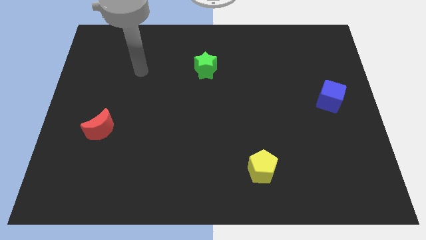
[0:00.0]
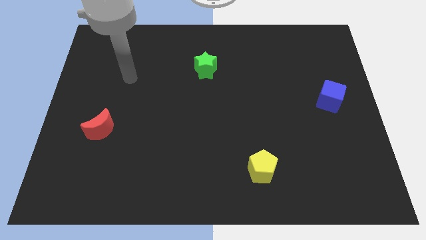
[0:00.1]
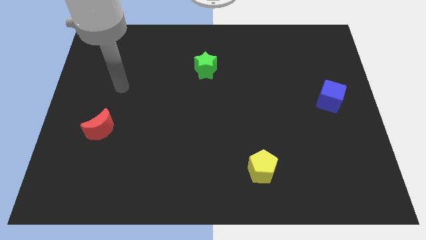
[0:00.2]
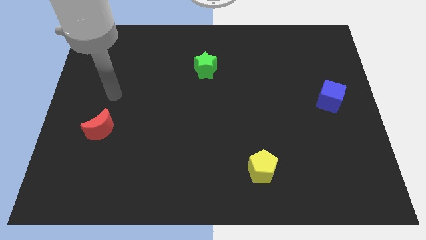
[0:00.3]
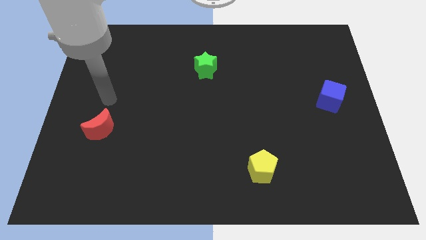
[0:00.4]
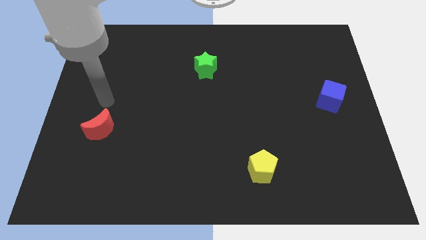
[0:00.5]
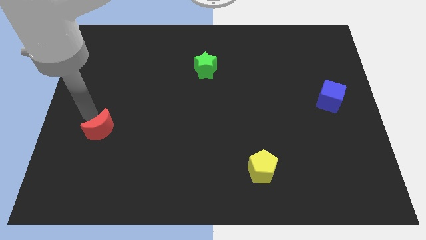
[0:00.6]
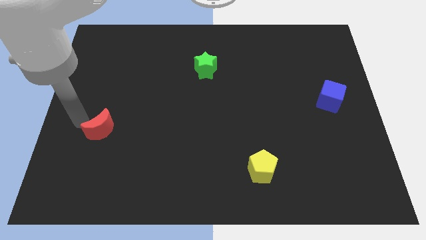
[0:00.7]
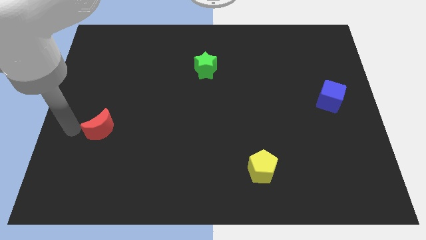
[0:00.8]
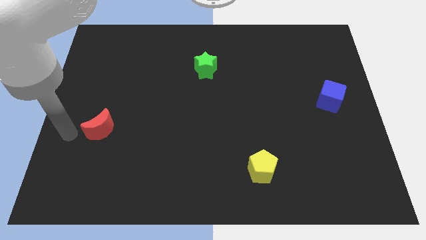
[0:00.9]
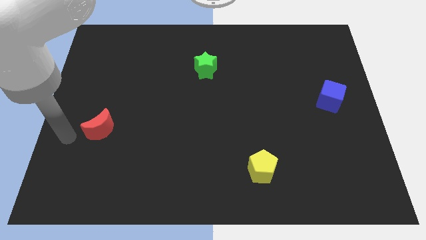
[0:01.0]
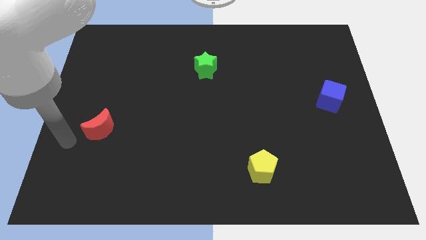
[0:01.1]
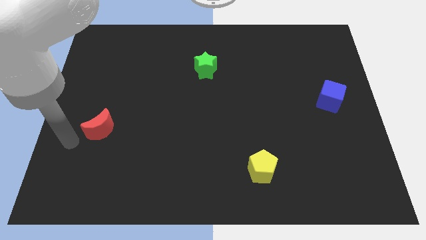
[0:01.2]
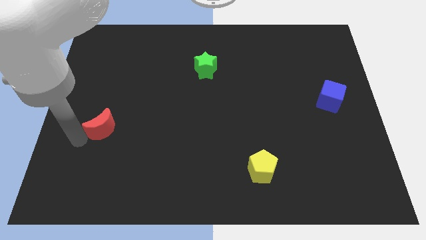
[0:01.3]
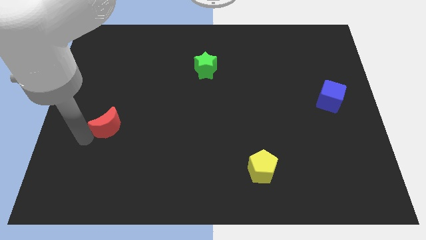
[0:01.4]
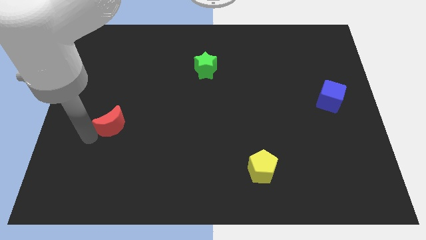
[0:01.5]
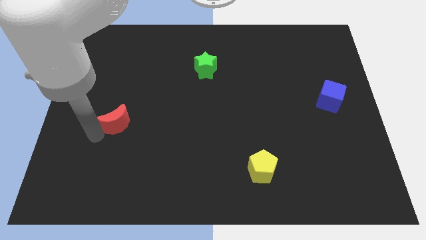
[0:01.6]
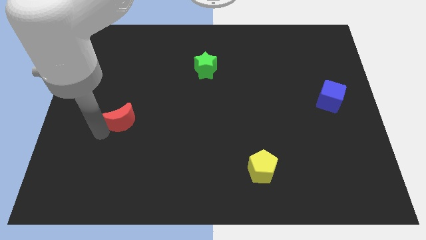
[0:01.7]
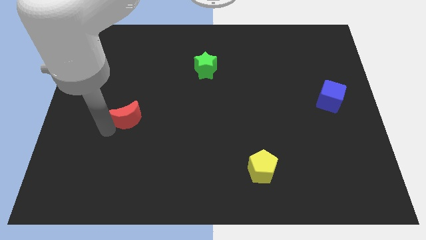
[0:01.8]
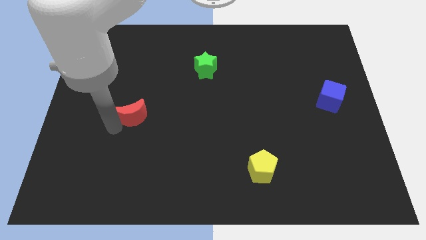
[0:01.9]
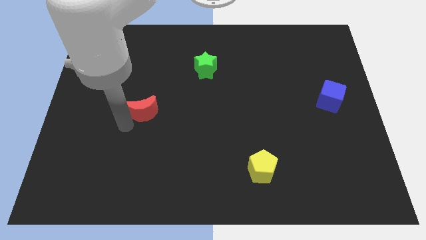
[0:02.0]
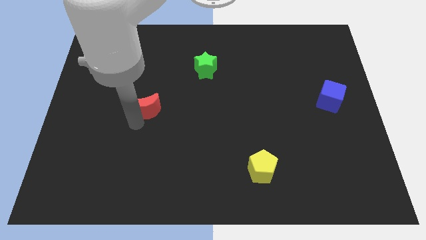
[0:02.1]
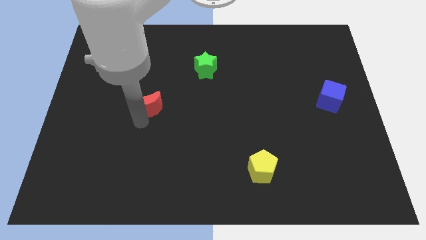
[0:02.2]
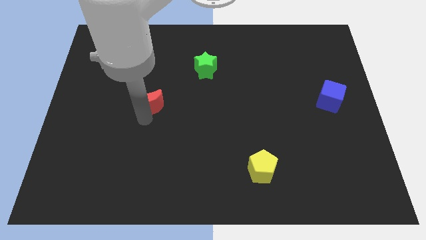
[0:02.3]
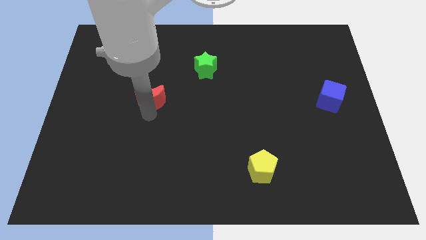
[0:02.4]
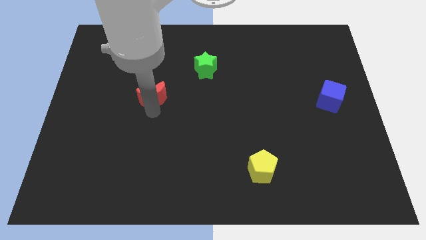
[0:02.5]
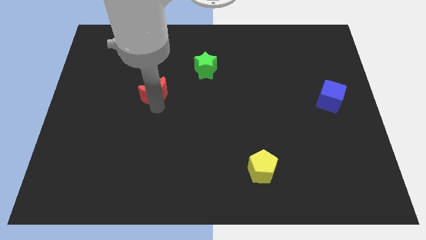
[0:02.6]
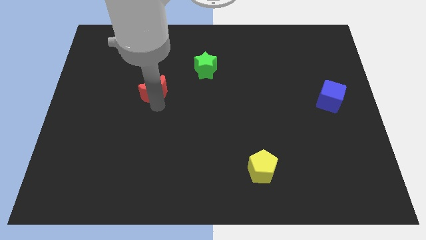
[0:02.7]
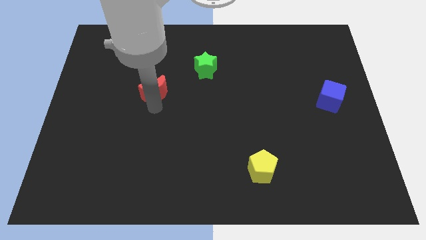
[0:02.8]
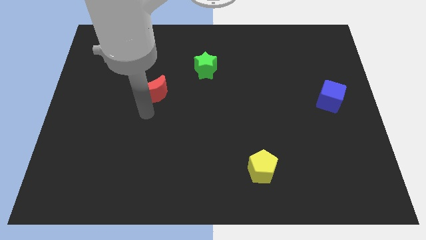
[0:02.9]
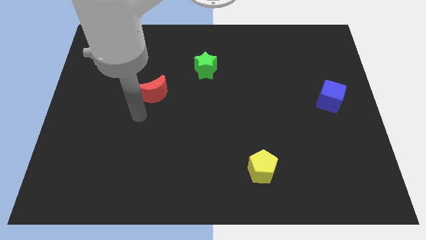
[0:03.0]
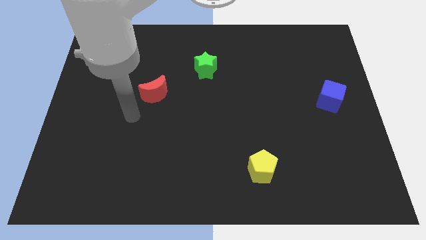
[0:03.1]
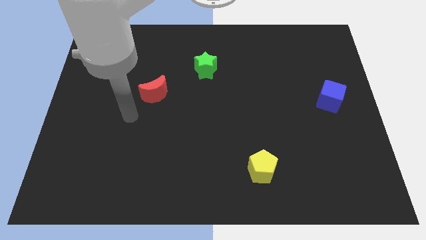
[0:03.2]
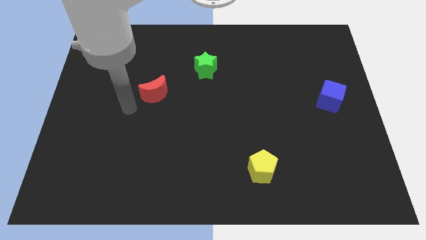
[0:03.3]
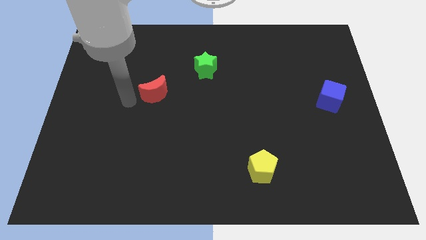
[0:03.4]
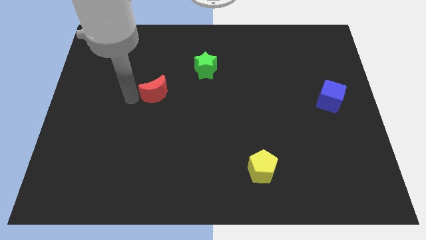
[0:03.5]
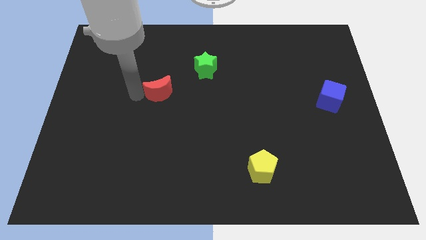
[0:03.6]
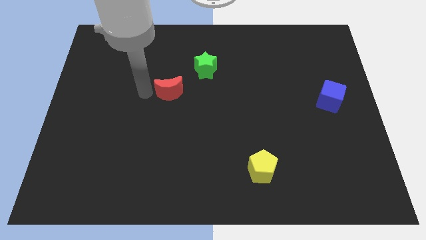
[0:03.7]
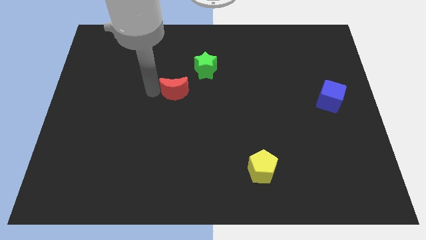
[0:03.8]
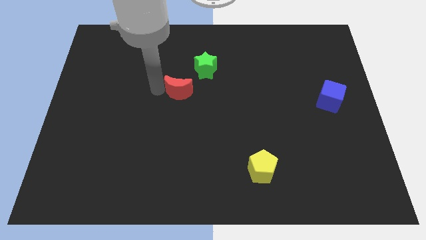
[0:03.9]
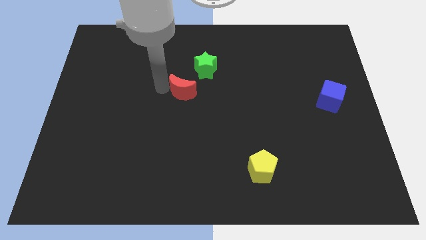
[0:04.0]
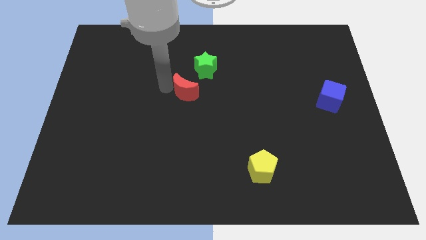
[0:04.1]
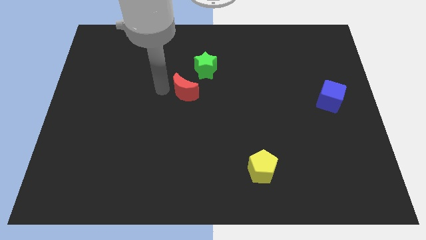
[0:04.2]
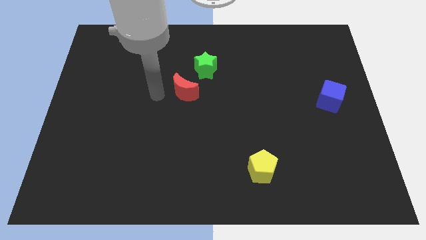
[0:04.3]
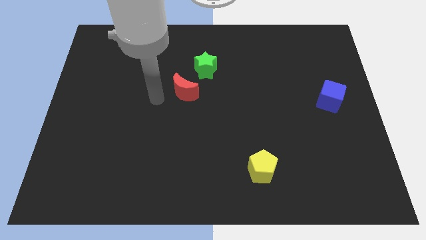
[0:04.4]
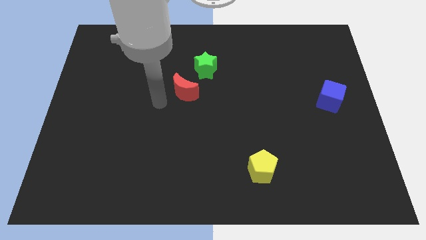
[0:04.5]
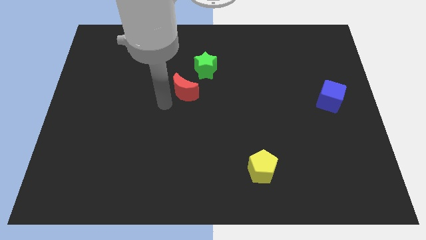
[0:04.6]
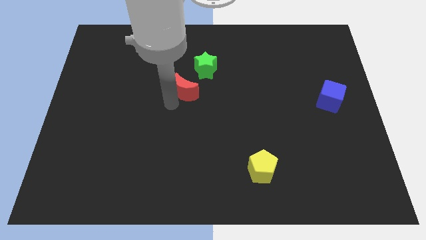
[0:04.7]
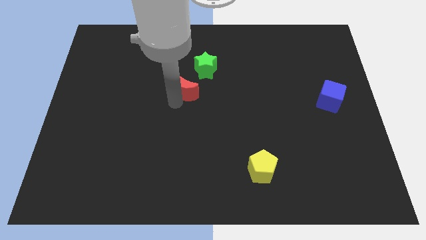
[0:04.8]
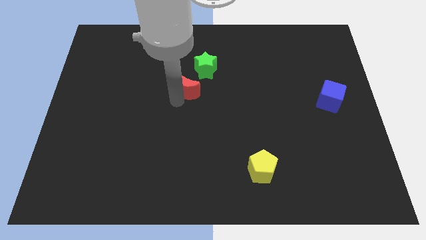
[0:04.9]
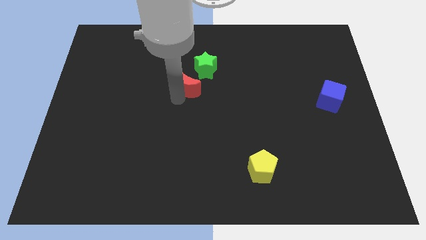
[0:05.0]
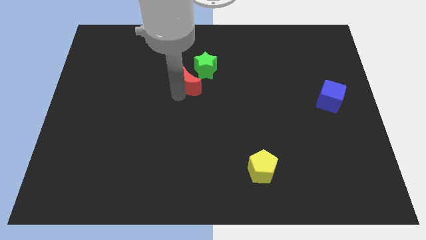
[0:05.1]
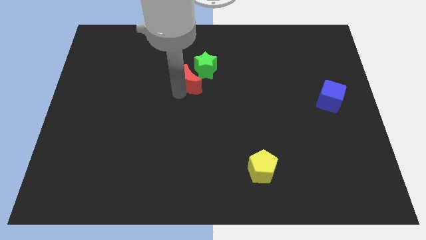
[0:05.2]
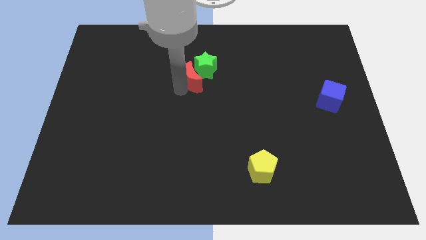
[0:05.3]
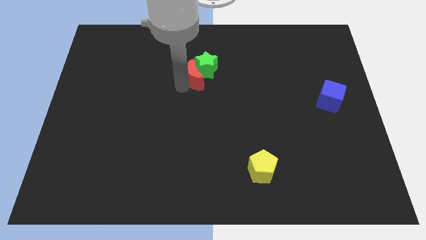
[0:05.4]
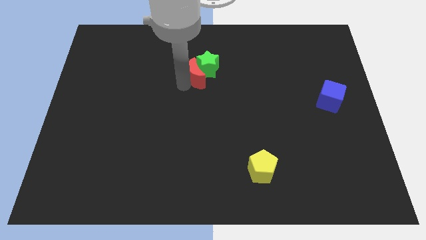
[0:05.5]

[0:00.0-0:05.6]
move the red block towards the star

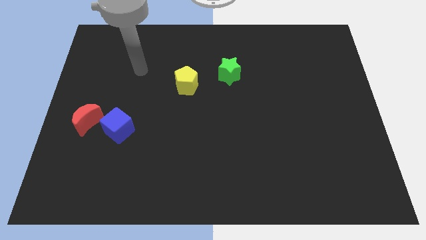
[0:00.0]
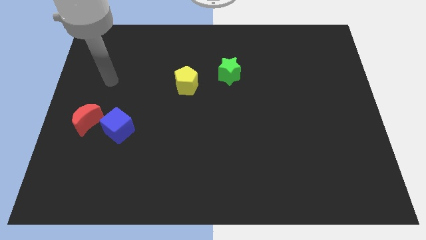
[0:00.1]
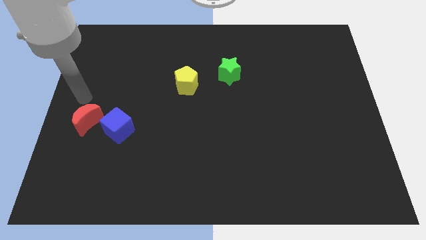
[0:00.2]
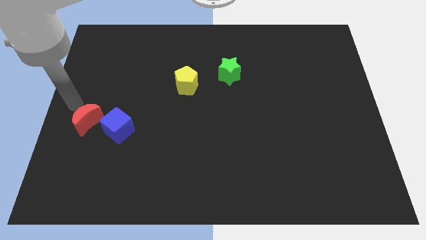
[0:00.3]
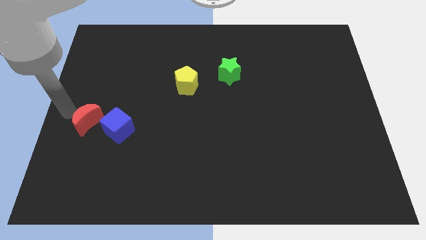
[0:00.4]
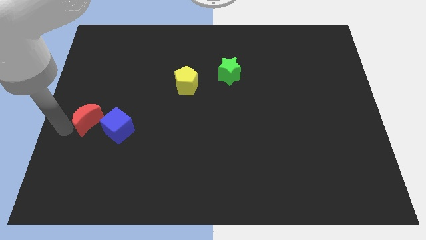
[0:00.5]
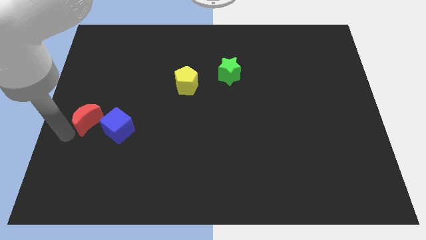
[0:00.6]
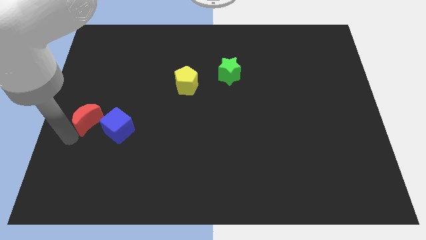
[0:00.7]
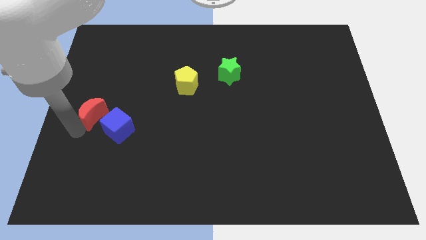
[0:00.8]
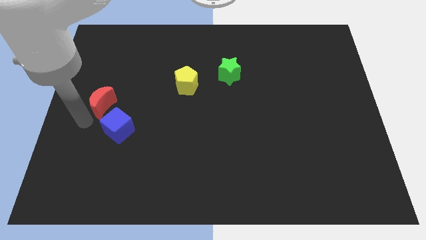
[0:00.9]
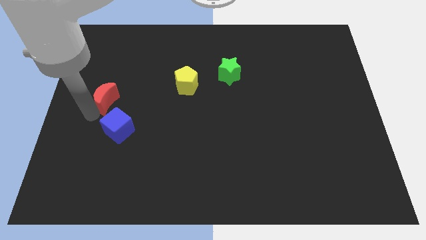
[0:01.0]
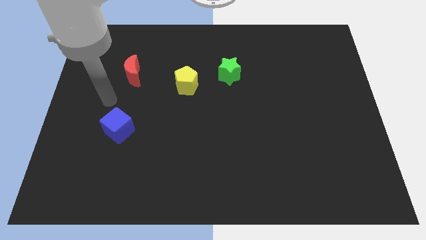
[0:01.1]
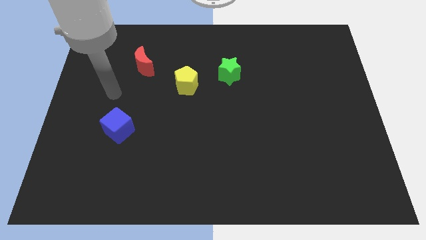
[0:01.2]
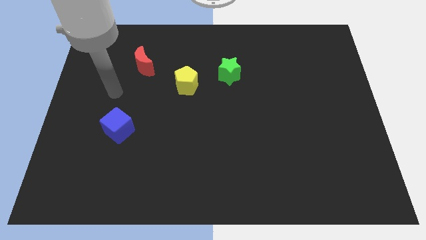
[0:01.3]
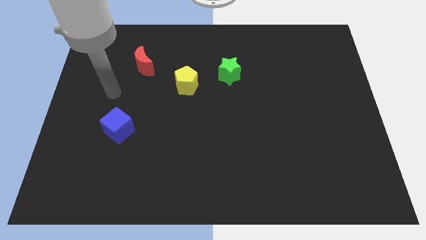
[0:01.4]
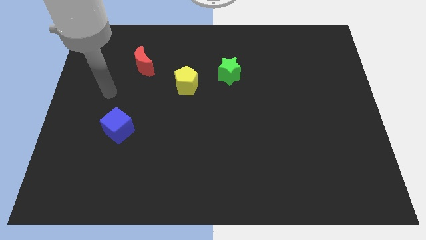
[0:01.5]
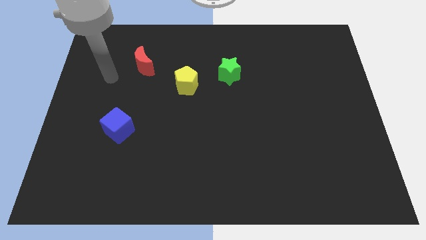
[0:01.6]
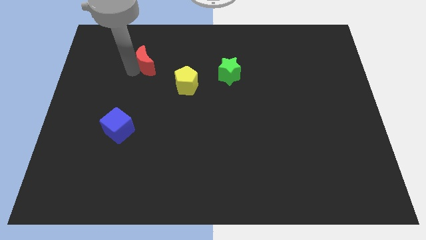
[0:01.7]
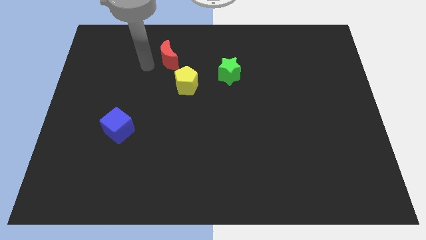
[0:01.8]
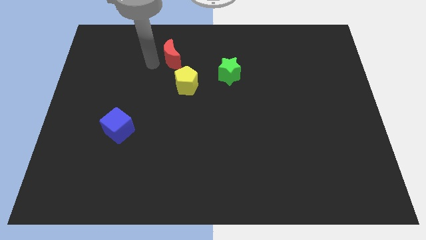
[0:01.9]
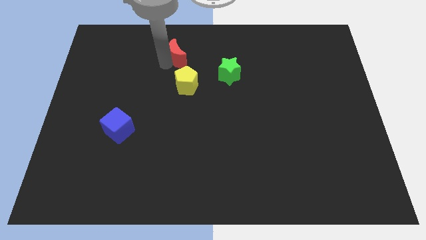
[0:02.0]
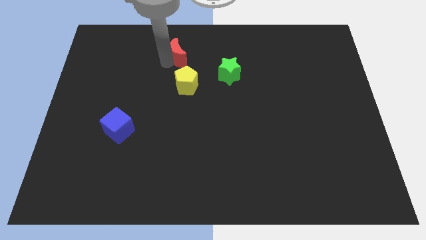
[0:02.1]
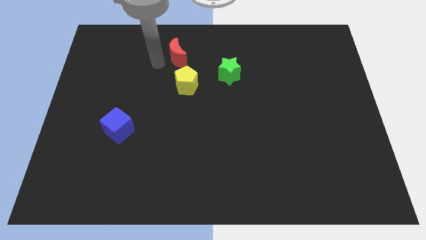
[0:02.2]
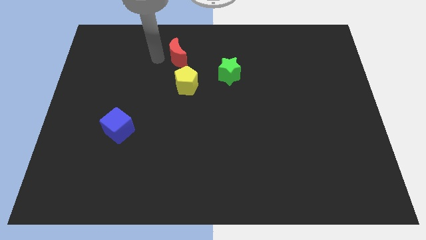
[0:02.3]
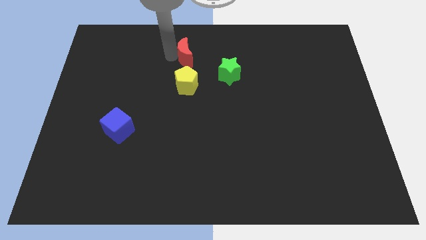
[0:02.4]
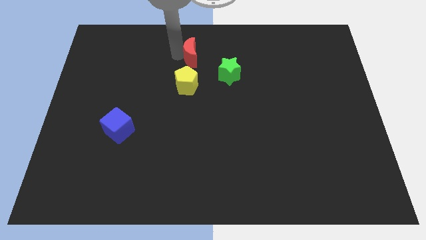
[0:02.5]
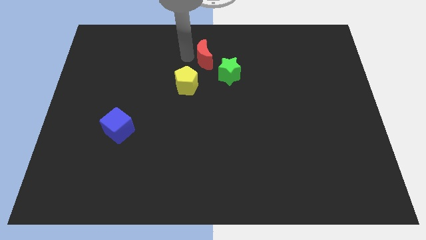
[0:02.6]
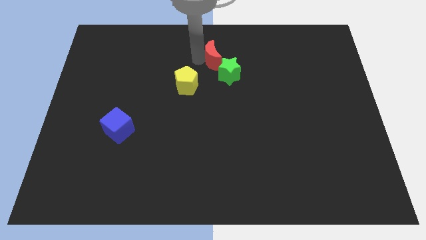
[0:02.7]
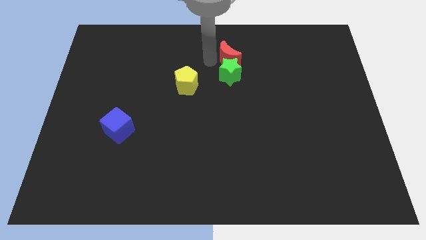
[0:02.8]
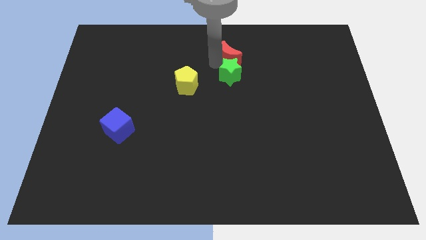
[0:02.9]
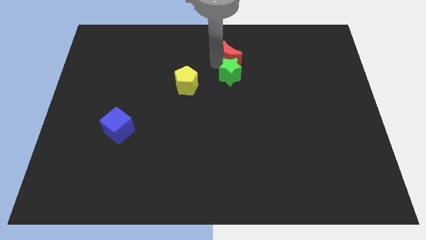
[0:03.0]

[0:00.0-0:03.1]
push the moon next to the green star
